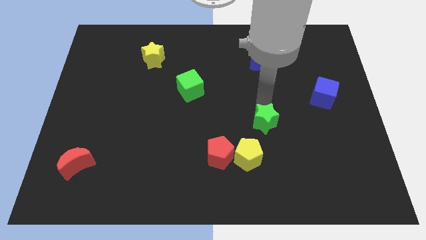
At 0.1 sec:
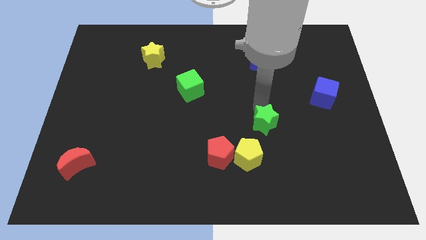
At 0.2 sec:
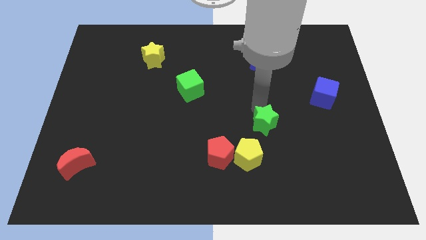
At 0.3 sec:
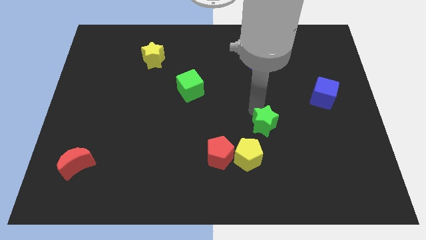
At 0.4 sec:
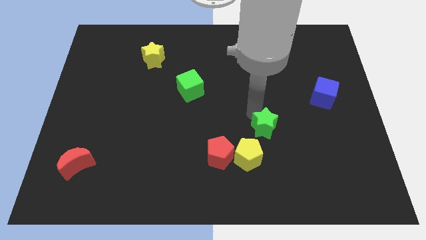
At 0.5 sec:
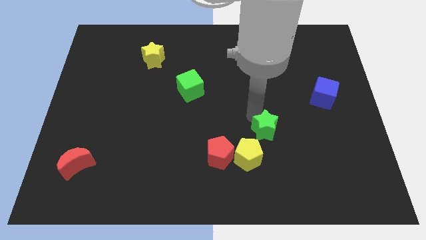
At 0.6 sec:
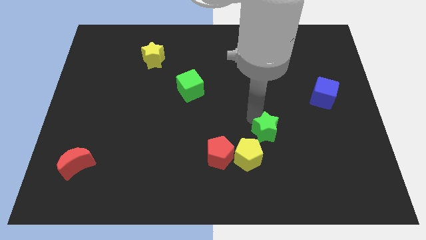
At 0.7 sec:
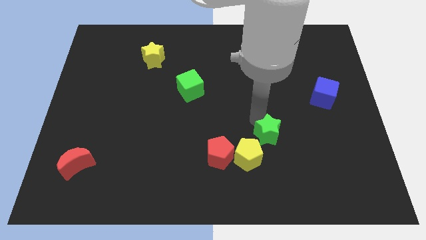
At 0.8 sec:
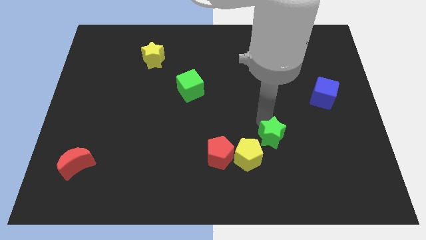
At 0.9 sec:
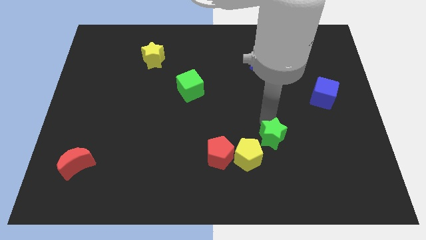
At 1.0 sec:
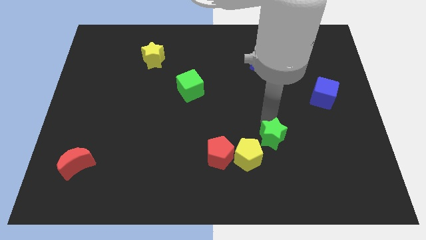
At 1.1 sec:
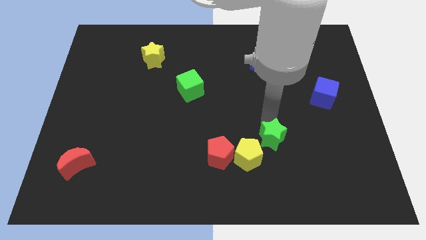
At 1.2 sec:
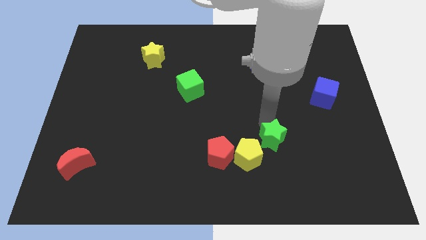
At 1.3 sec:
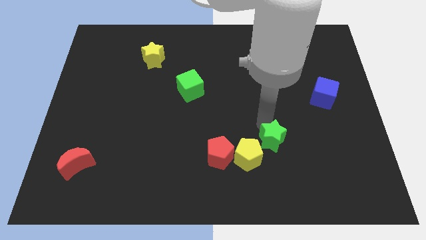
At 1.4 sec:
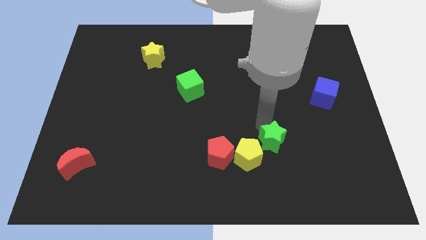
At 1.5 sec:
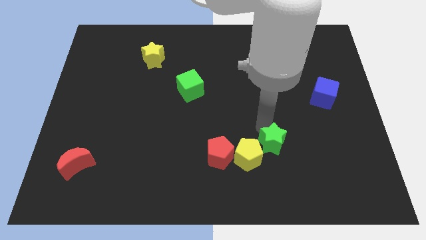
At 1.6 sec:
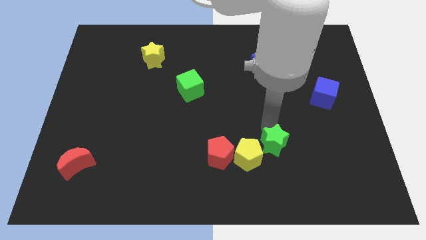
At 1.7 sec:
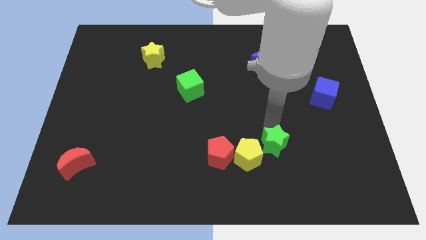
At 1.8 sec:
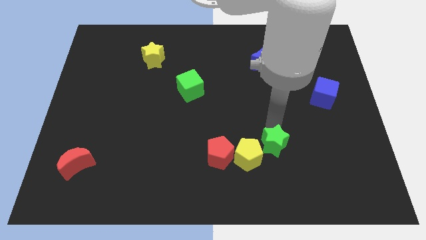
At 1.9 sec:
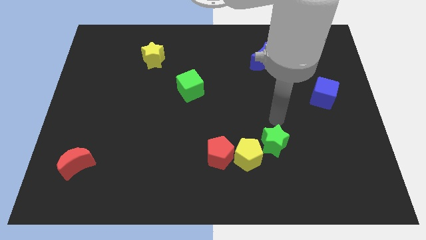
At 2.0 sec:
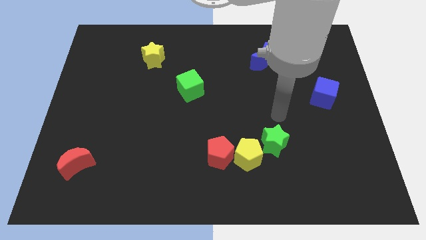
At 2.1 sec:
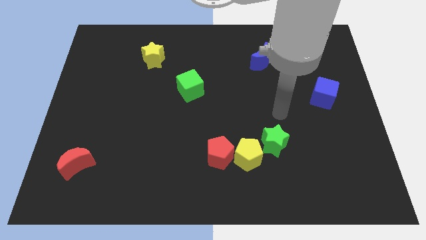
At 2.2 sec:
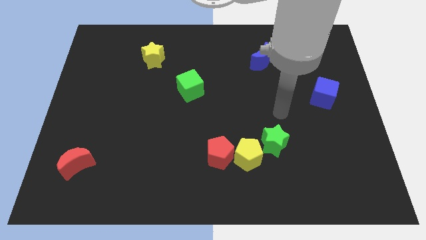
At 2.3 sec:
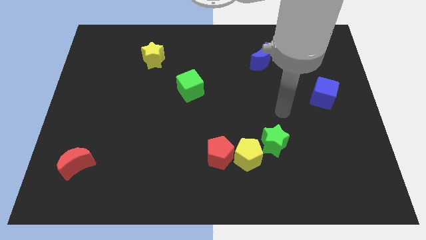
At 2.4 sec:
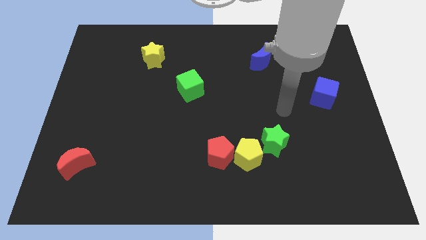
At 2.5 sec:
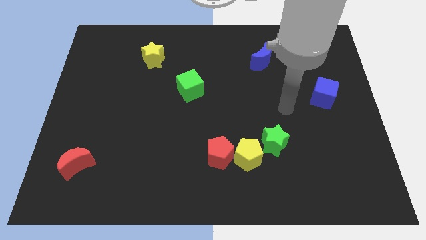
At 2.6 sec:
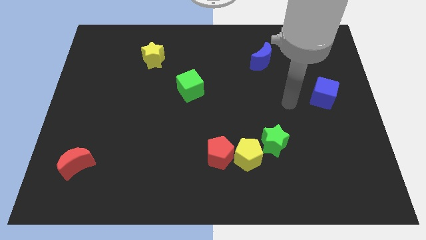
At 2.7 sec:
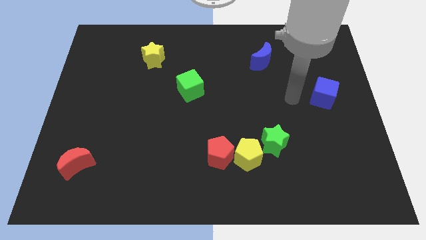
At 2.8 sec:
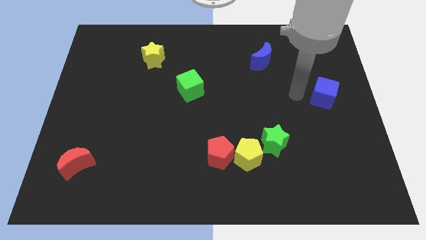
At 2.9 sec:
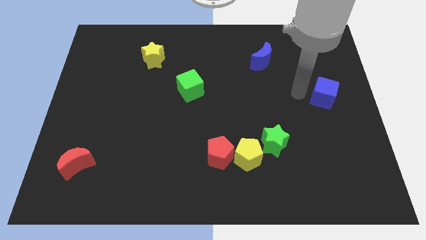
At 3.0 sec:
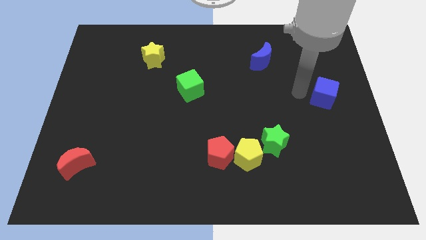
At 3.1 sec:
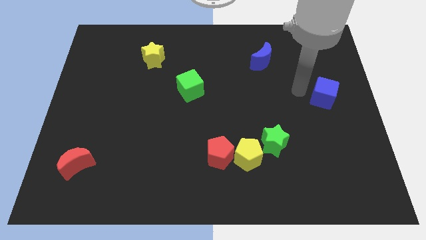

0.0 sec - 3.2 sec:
move the green star to the right of the yellow pentagon

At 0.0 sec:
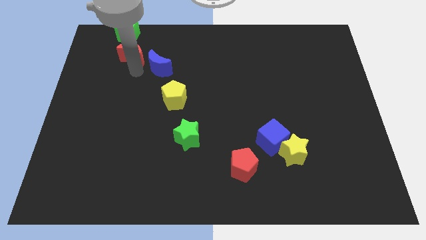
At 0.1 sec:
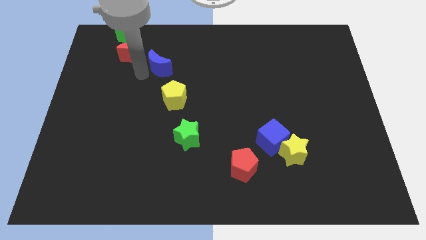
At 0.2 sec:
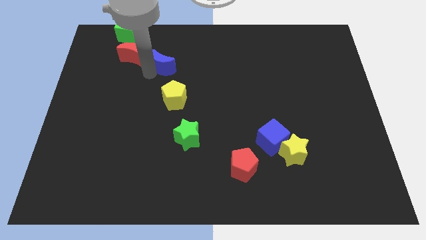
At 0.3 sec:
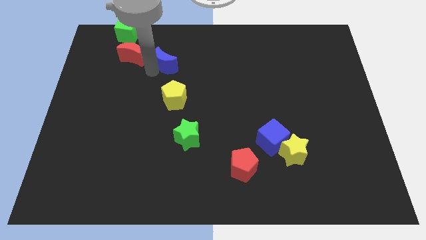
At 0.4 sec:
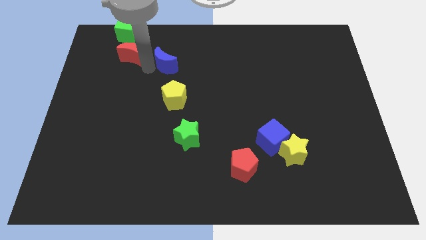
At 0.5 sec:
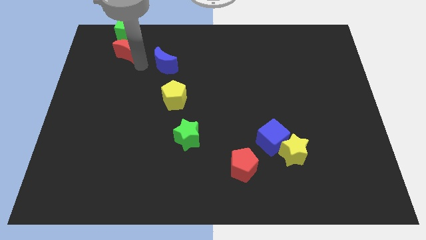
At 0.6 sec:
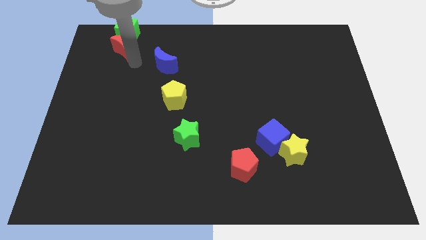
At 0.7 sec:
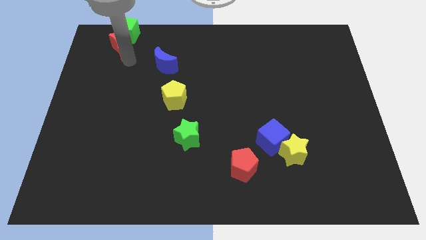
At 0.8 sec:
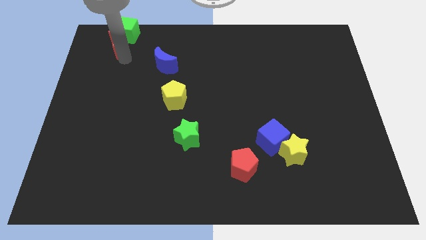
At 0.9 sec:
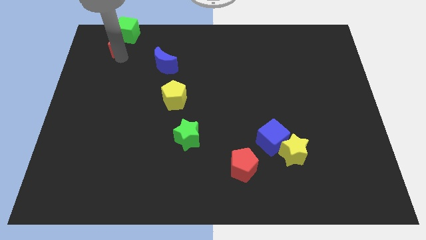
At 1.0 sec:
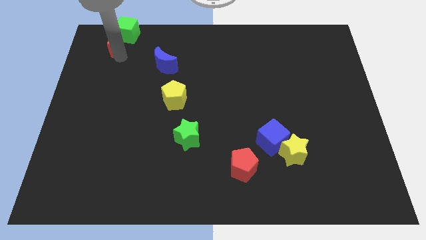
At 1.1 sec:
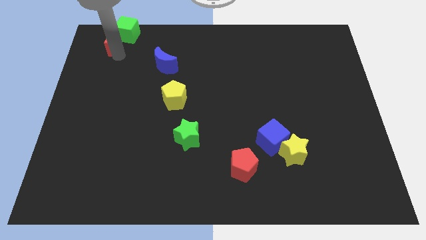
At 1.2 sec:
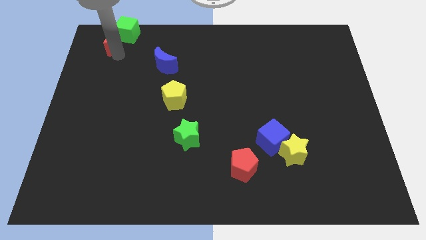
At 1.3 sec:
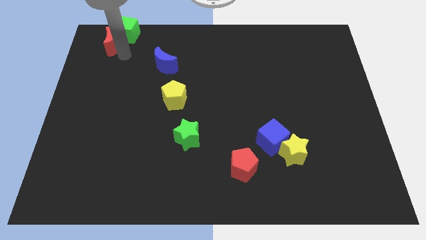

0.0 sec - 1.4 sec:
move the red crescent into the green cube from the bottom

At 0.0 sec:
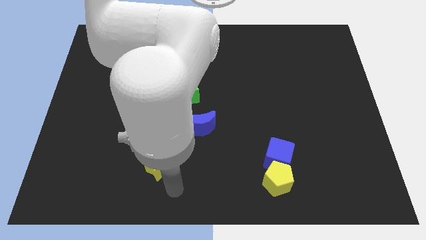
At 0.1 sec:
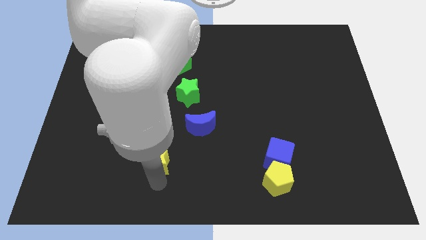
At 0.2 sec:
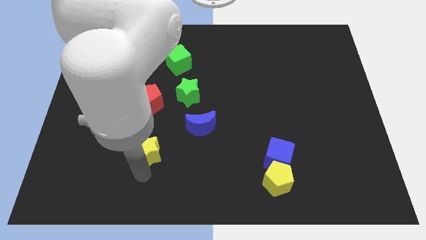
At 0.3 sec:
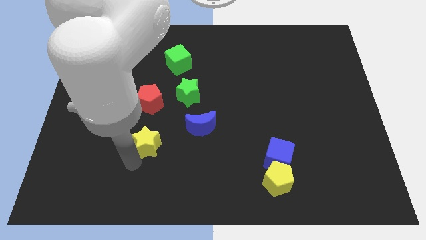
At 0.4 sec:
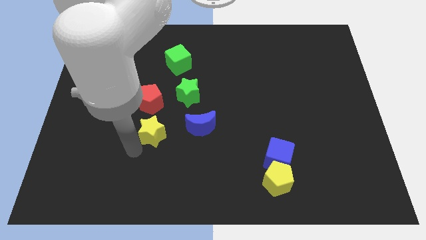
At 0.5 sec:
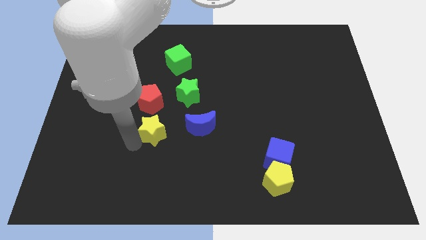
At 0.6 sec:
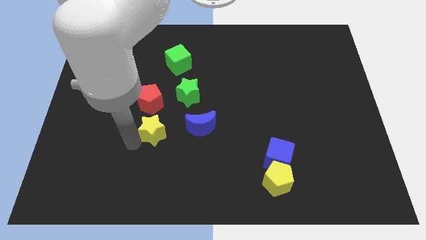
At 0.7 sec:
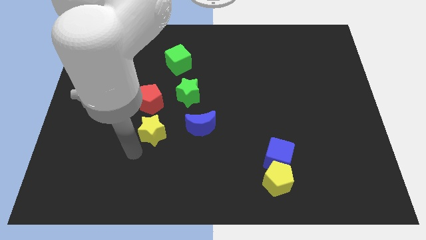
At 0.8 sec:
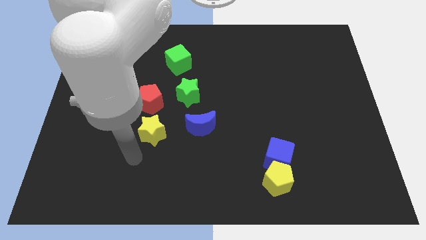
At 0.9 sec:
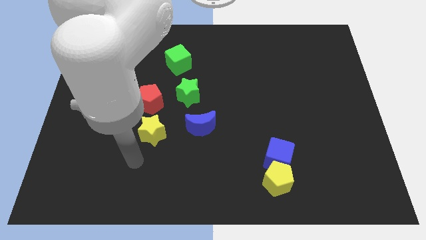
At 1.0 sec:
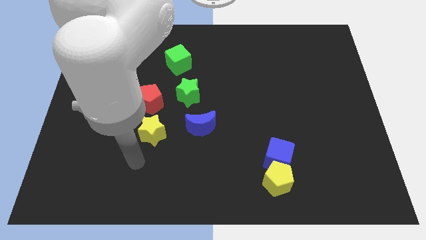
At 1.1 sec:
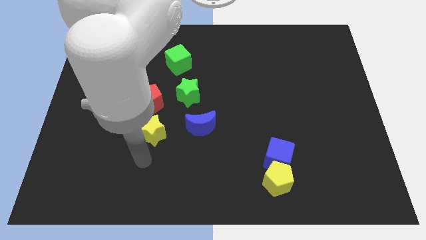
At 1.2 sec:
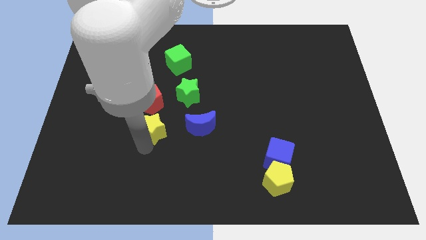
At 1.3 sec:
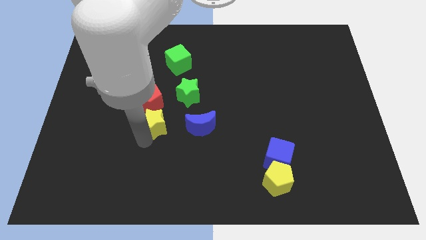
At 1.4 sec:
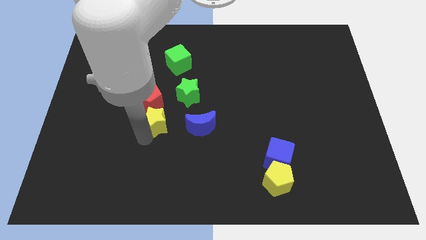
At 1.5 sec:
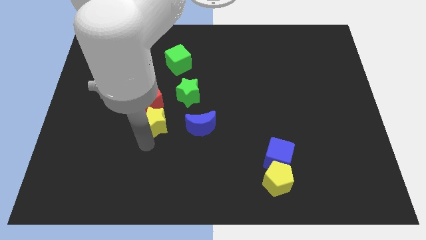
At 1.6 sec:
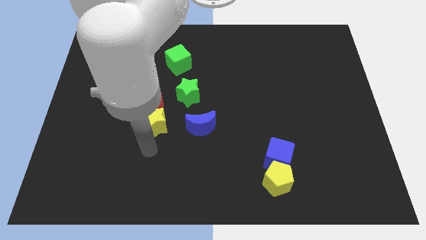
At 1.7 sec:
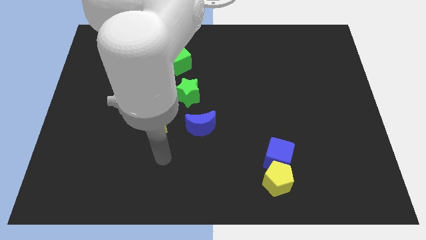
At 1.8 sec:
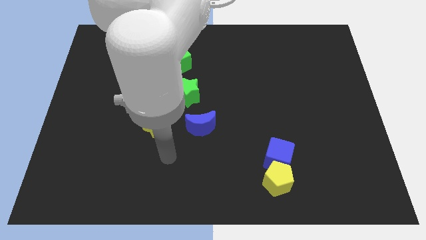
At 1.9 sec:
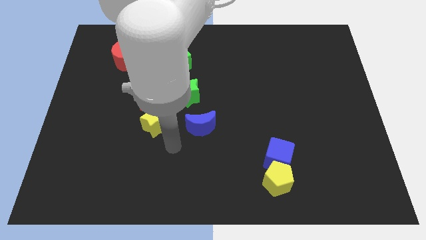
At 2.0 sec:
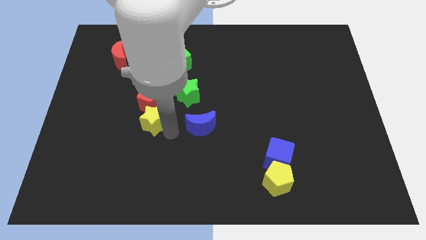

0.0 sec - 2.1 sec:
move yellow star into red pentagon

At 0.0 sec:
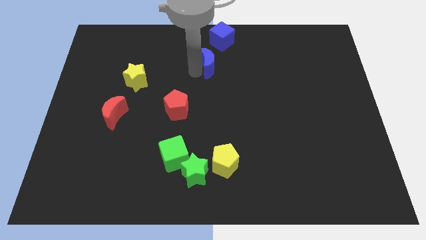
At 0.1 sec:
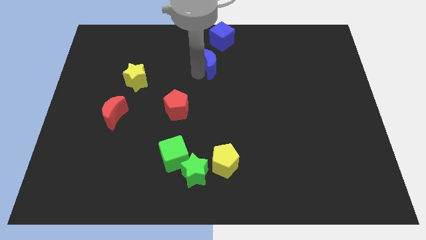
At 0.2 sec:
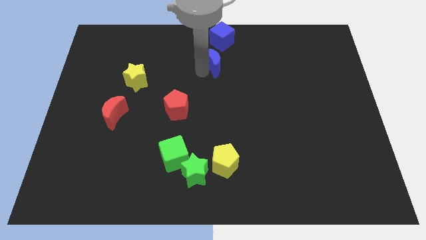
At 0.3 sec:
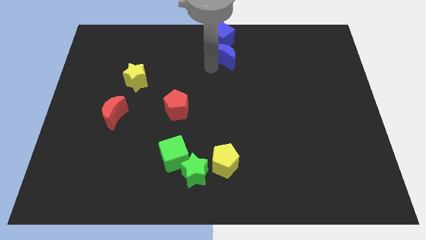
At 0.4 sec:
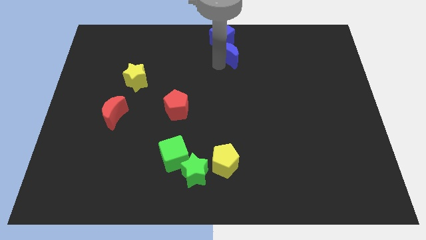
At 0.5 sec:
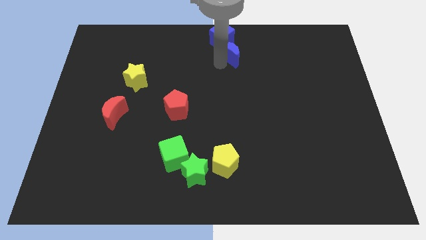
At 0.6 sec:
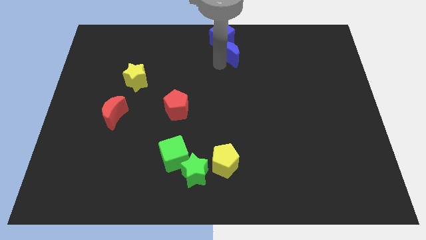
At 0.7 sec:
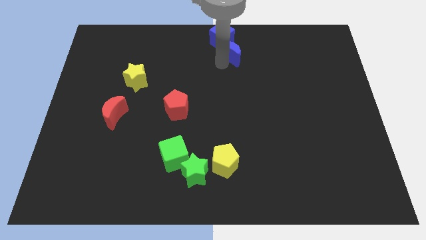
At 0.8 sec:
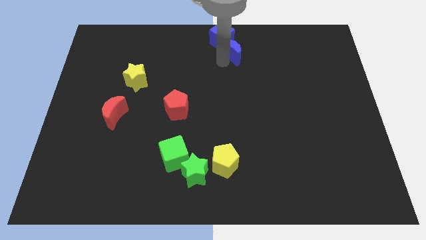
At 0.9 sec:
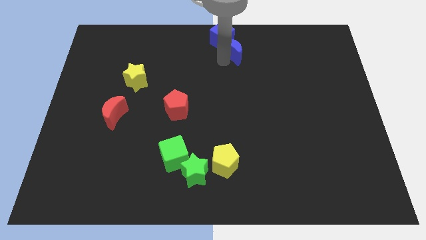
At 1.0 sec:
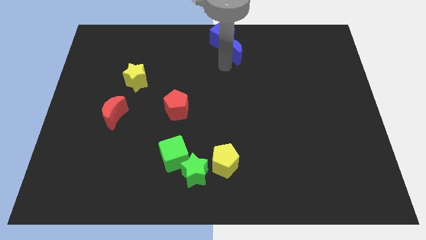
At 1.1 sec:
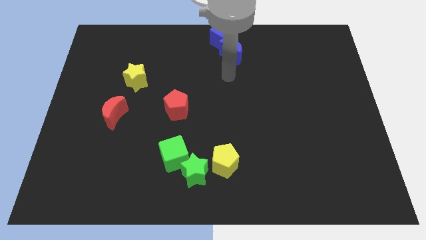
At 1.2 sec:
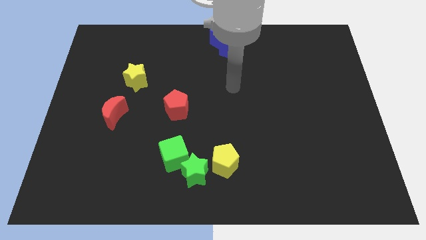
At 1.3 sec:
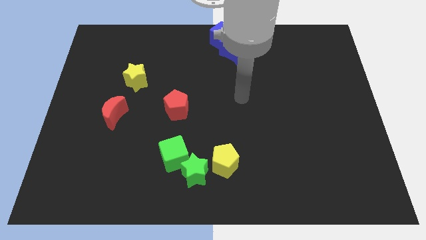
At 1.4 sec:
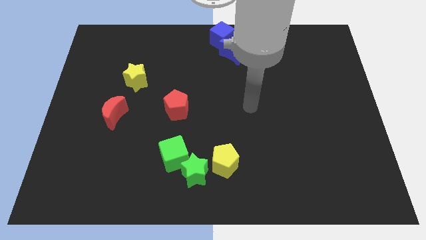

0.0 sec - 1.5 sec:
move blue moon into blue cube

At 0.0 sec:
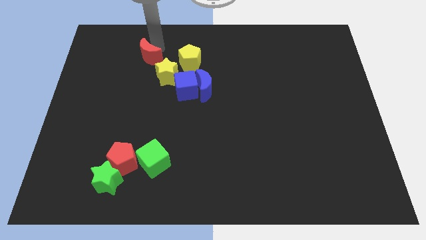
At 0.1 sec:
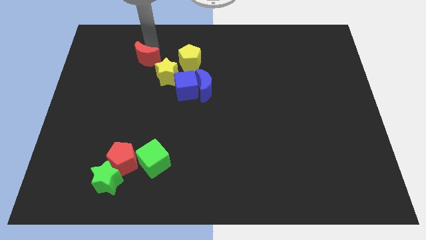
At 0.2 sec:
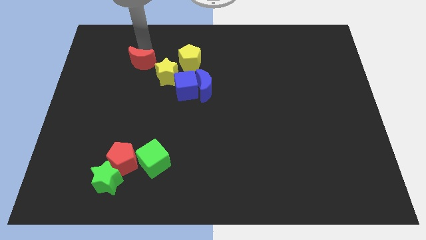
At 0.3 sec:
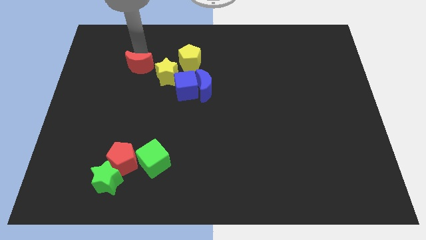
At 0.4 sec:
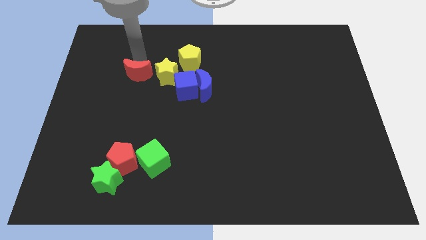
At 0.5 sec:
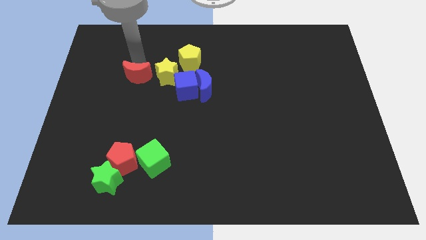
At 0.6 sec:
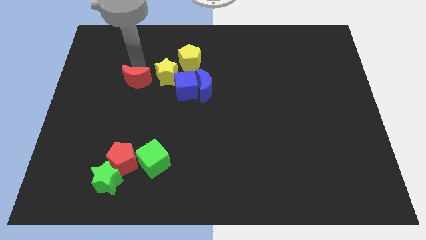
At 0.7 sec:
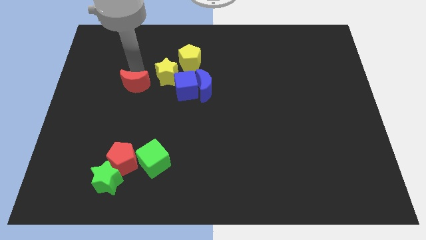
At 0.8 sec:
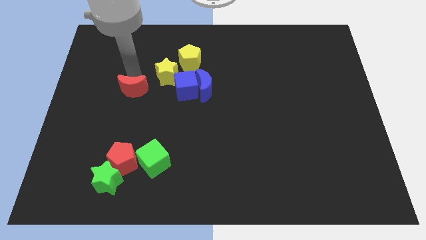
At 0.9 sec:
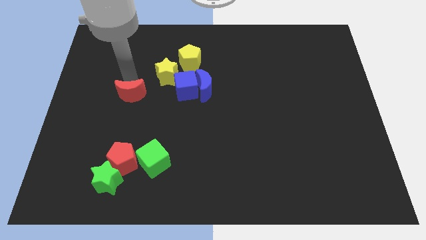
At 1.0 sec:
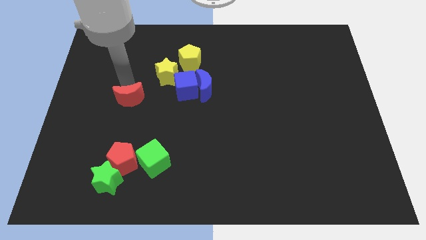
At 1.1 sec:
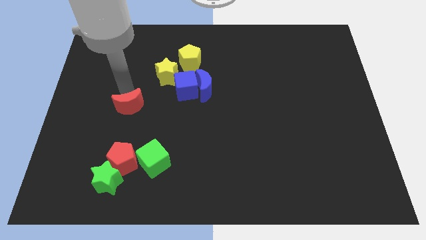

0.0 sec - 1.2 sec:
push red moon downwards of the board
